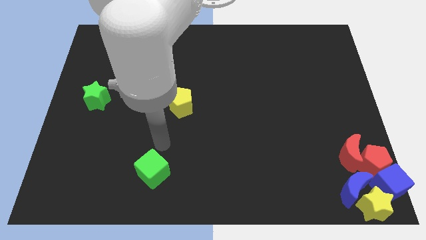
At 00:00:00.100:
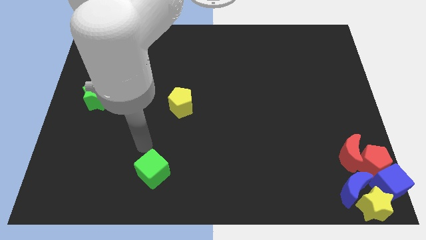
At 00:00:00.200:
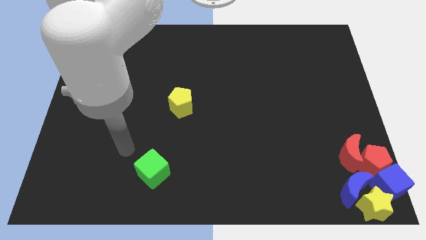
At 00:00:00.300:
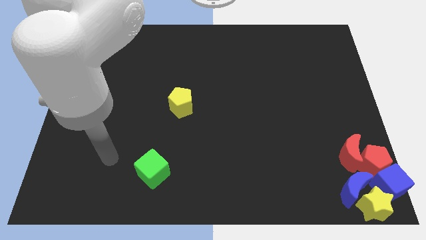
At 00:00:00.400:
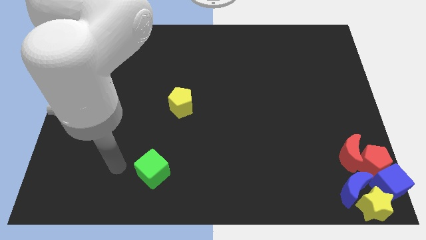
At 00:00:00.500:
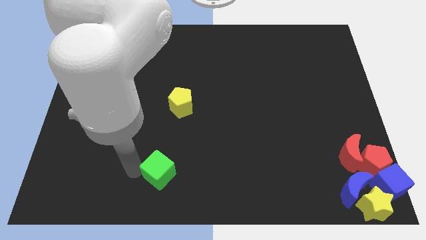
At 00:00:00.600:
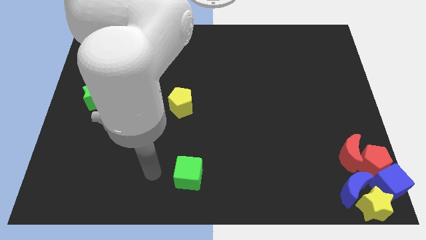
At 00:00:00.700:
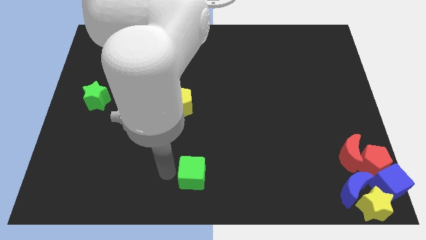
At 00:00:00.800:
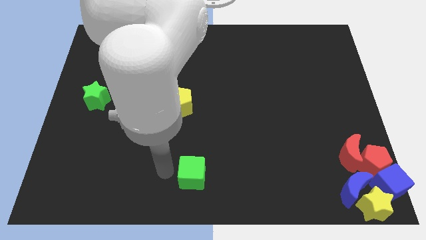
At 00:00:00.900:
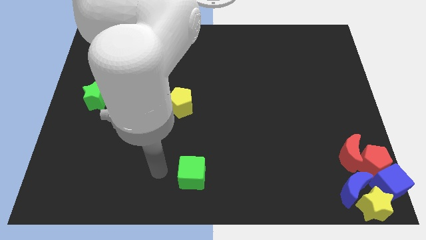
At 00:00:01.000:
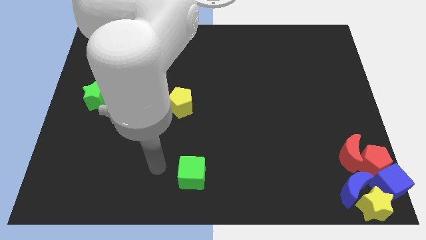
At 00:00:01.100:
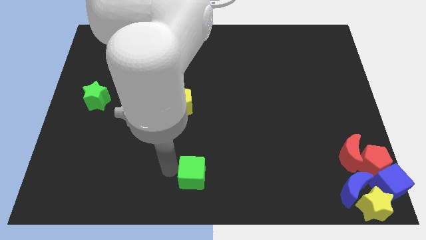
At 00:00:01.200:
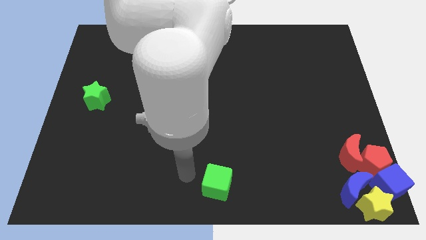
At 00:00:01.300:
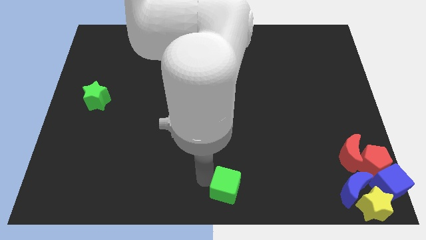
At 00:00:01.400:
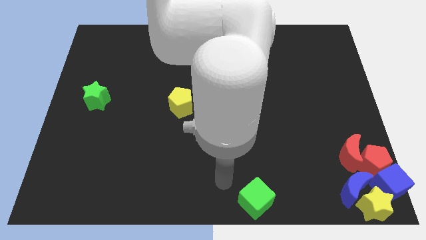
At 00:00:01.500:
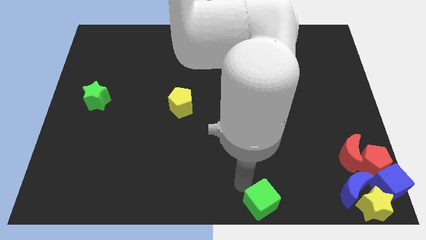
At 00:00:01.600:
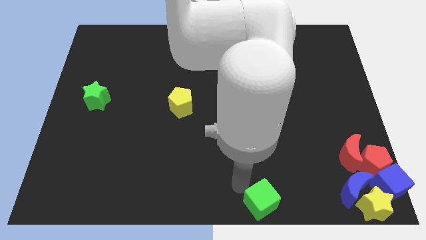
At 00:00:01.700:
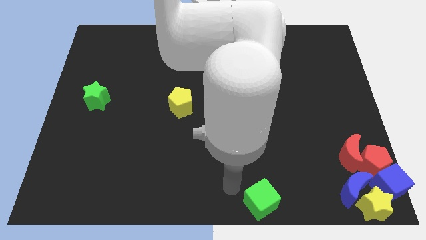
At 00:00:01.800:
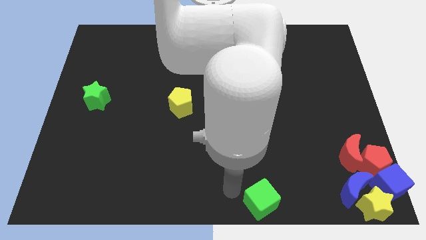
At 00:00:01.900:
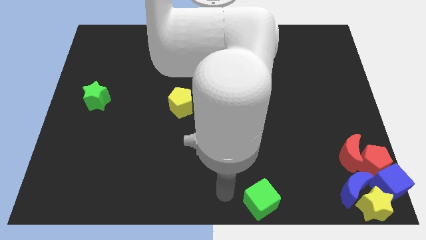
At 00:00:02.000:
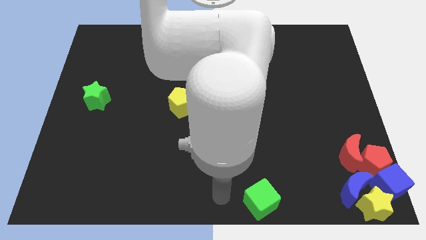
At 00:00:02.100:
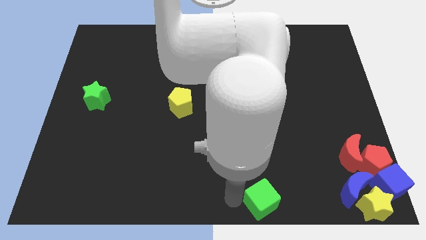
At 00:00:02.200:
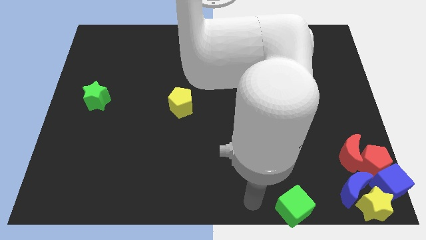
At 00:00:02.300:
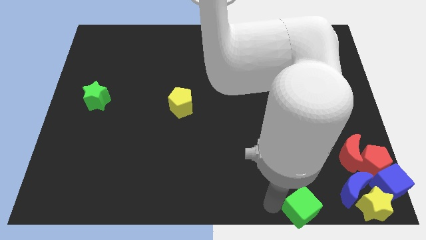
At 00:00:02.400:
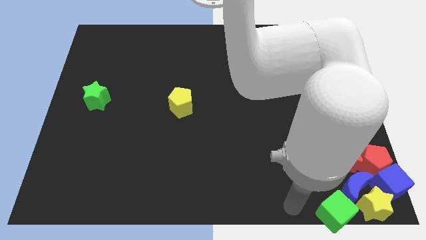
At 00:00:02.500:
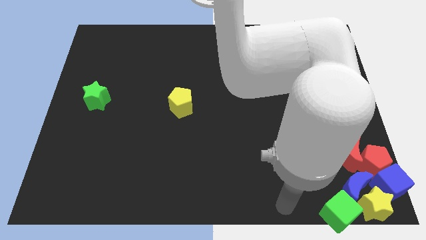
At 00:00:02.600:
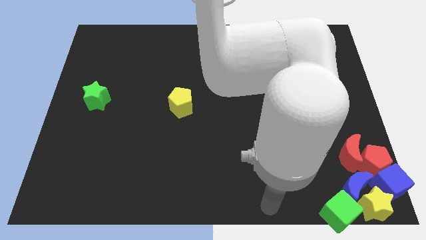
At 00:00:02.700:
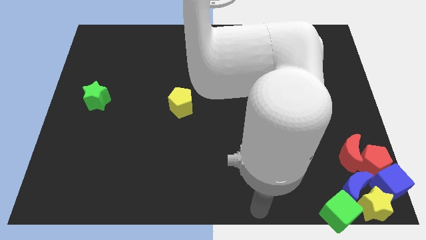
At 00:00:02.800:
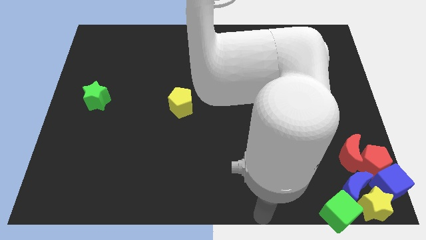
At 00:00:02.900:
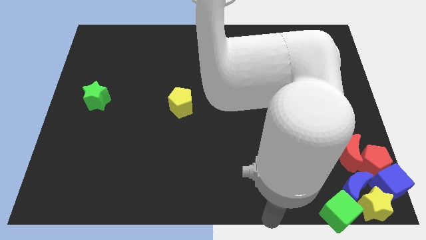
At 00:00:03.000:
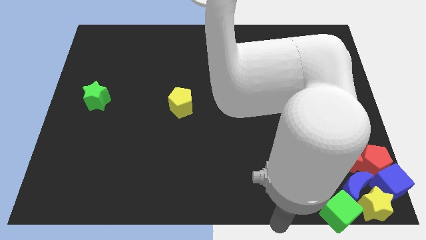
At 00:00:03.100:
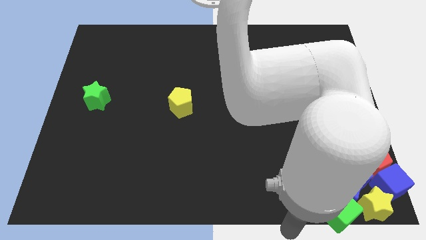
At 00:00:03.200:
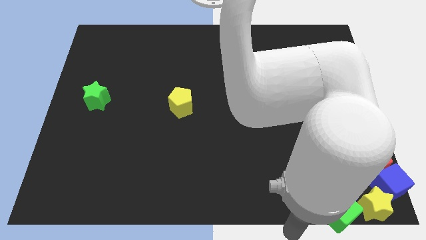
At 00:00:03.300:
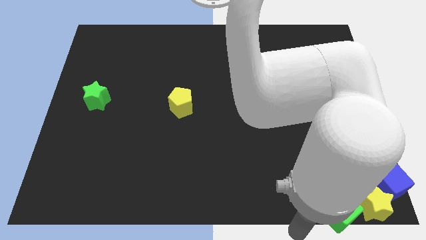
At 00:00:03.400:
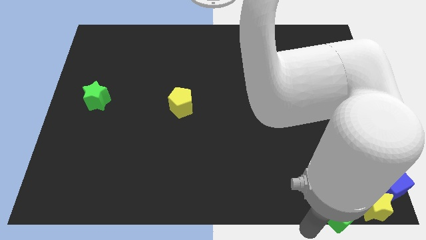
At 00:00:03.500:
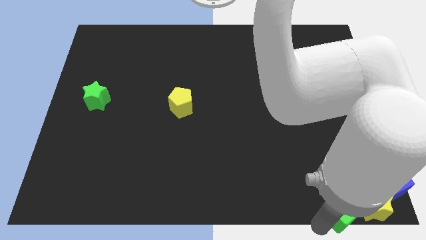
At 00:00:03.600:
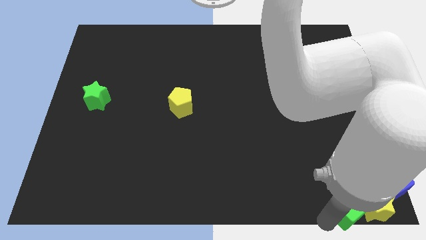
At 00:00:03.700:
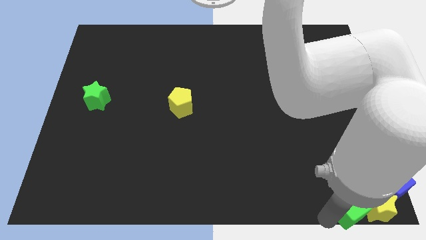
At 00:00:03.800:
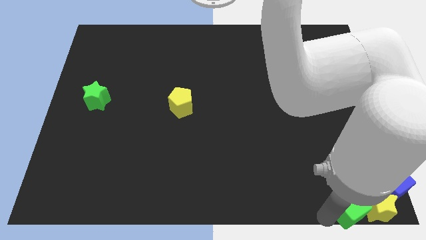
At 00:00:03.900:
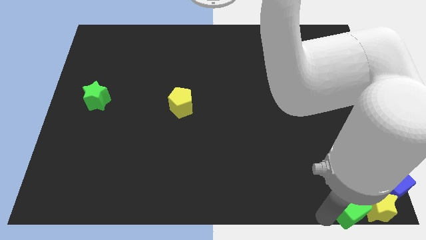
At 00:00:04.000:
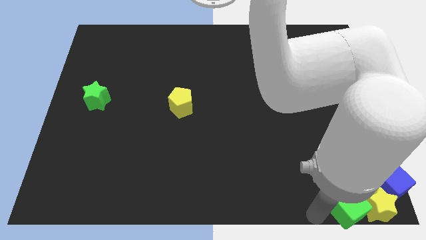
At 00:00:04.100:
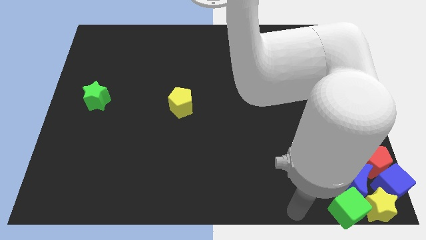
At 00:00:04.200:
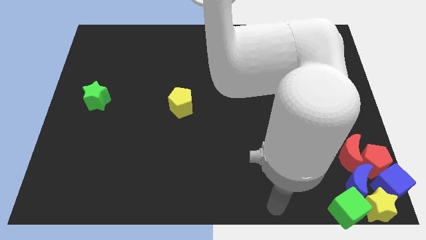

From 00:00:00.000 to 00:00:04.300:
push the green cube into the yellow star

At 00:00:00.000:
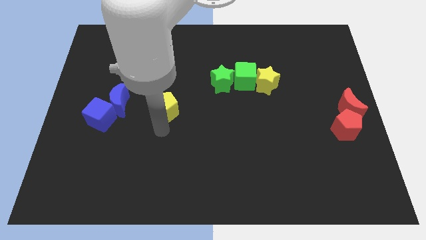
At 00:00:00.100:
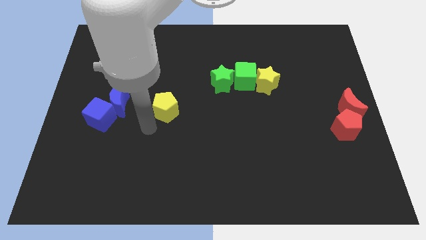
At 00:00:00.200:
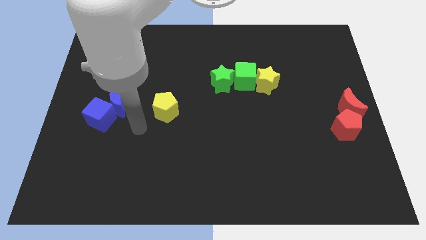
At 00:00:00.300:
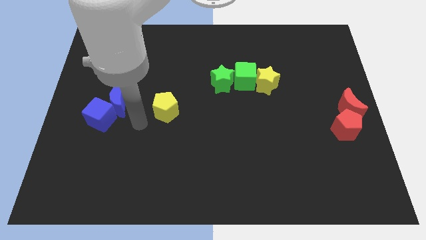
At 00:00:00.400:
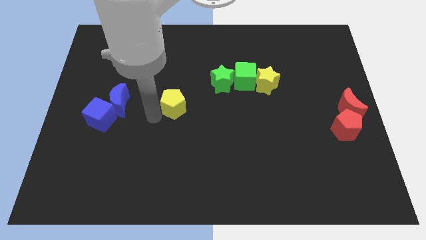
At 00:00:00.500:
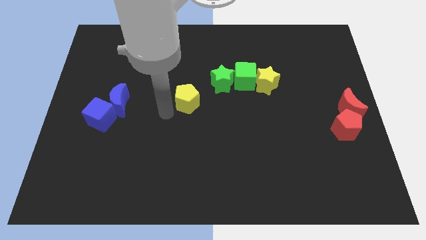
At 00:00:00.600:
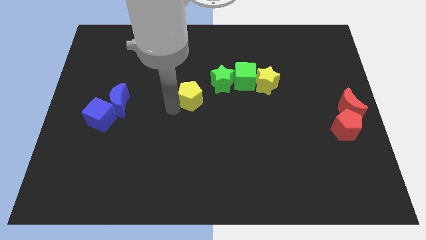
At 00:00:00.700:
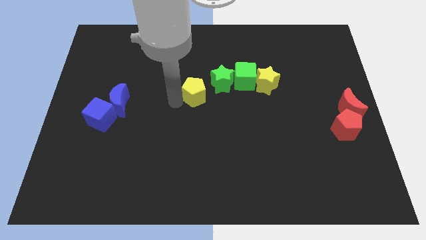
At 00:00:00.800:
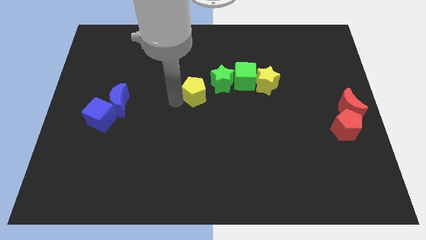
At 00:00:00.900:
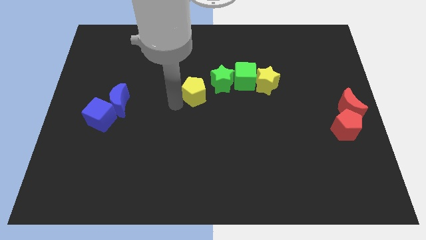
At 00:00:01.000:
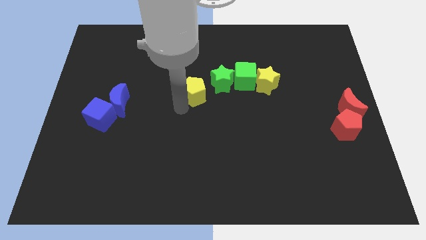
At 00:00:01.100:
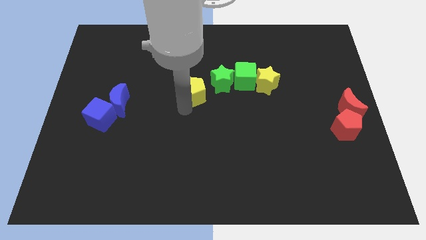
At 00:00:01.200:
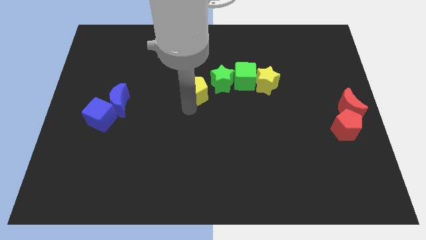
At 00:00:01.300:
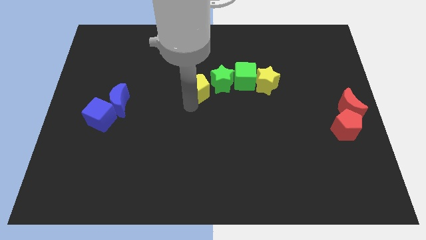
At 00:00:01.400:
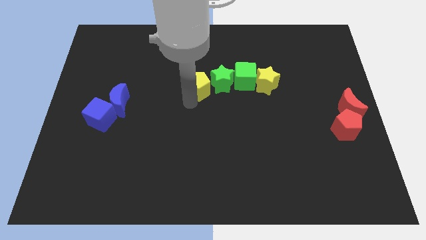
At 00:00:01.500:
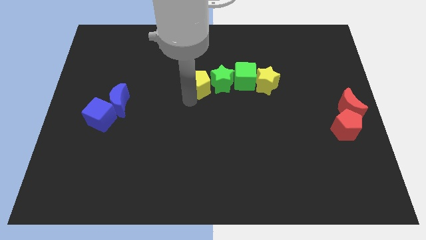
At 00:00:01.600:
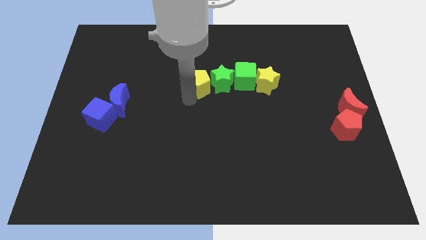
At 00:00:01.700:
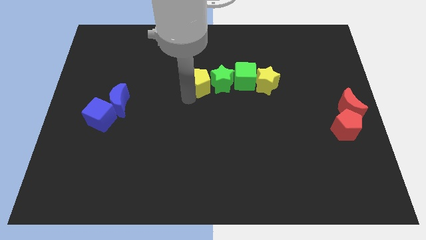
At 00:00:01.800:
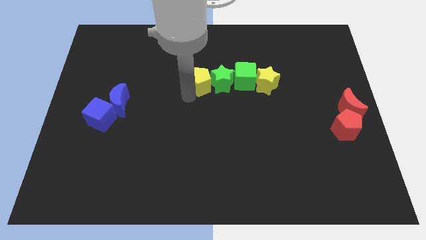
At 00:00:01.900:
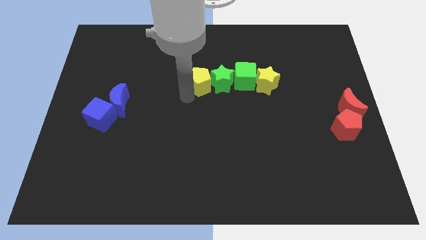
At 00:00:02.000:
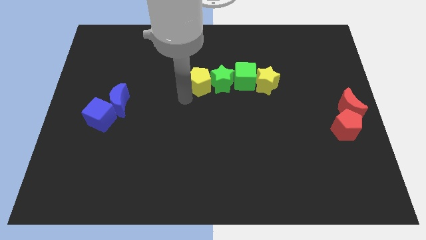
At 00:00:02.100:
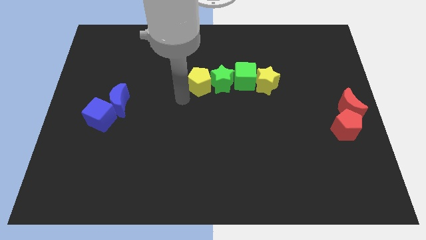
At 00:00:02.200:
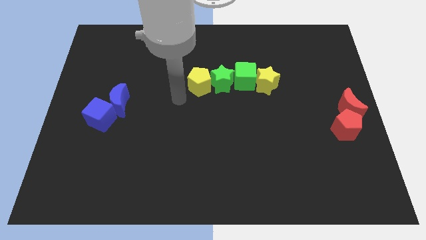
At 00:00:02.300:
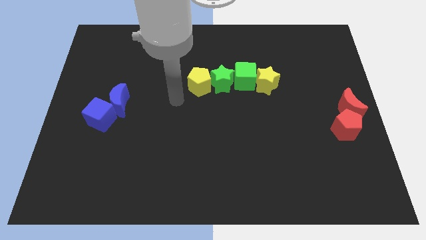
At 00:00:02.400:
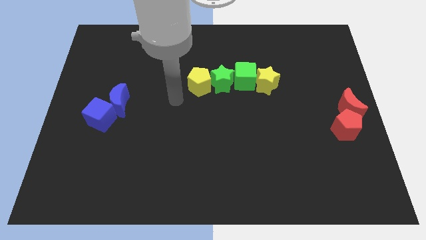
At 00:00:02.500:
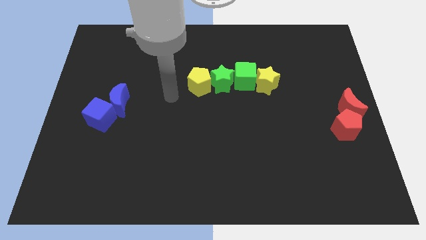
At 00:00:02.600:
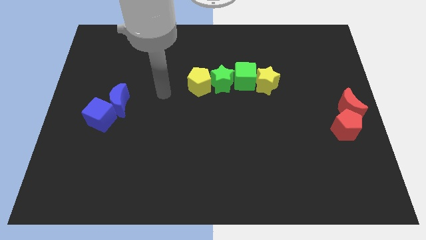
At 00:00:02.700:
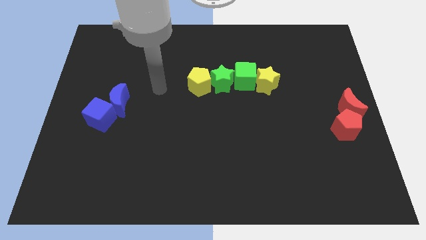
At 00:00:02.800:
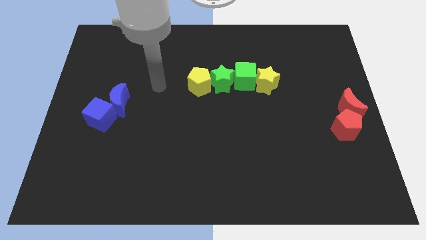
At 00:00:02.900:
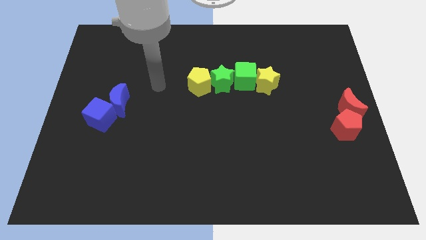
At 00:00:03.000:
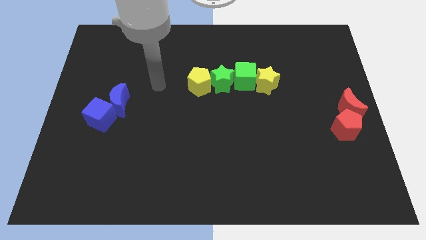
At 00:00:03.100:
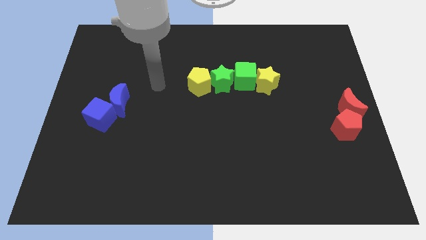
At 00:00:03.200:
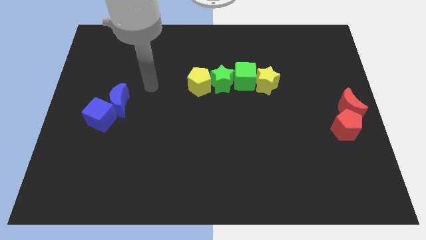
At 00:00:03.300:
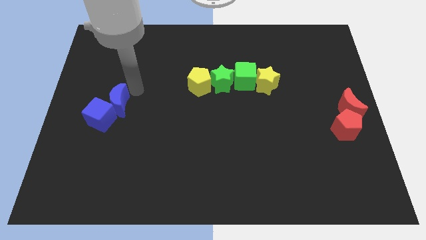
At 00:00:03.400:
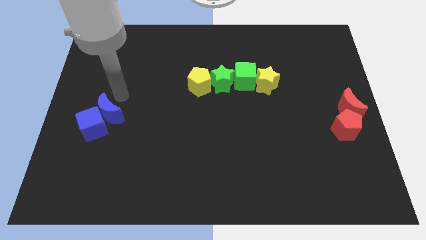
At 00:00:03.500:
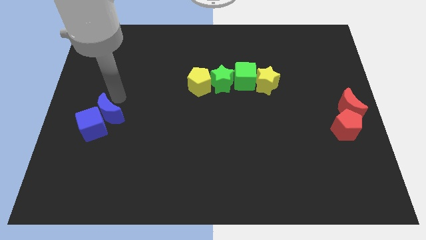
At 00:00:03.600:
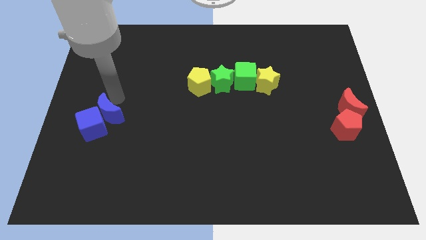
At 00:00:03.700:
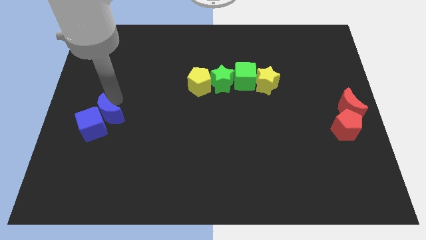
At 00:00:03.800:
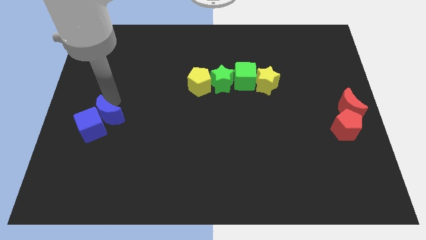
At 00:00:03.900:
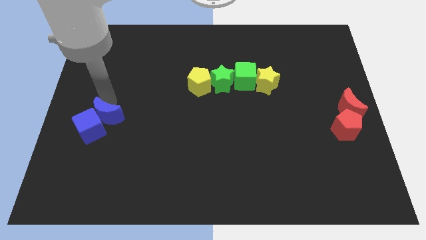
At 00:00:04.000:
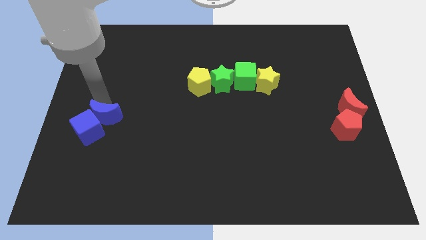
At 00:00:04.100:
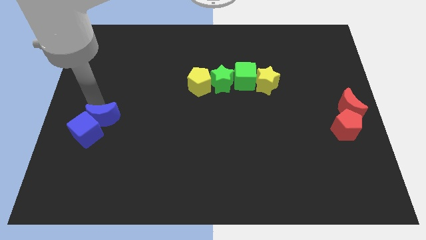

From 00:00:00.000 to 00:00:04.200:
push the blue cube with blue moon slightly towards the bottom left of the board

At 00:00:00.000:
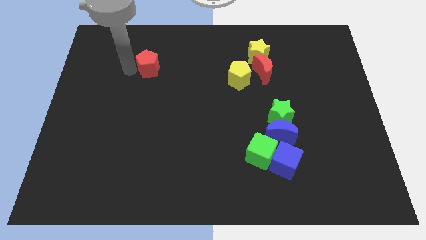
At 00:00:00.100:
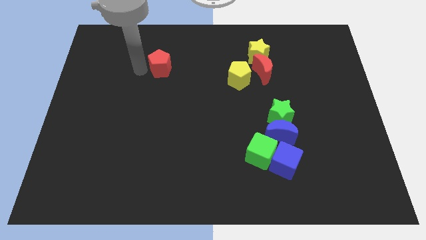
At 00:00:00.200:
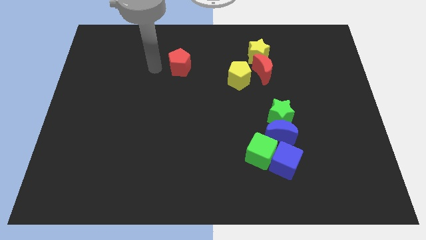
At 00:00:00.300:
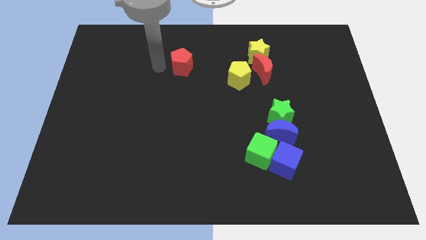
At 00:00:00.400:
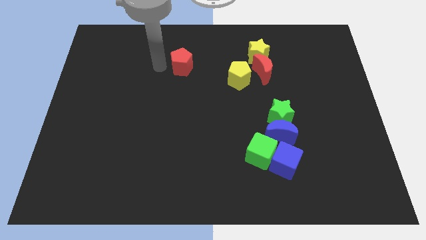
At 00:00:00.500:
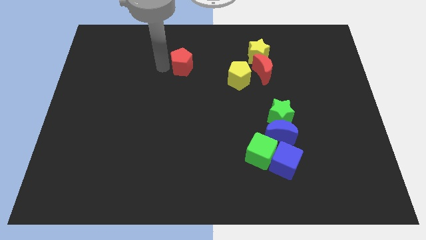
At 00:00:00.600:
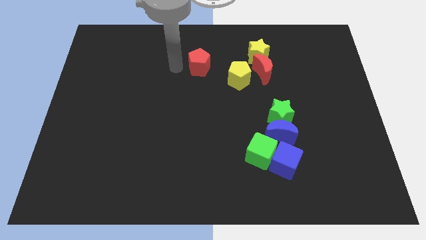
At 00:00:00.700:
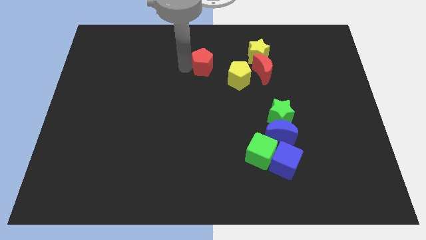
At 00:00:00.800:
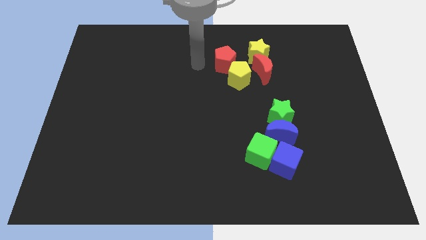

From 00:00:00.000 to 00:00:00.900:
push red pentagon towards the top of yellow pentagon
